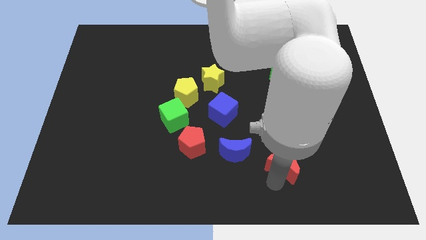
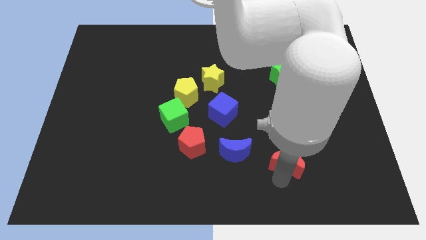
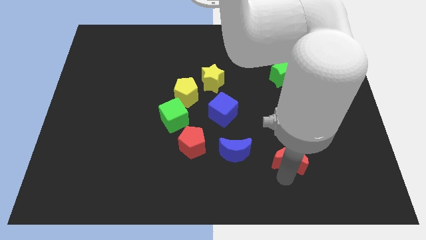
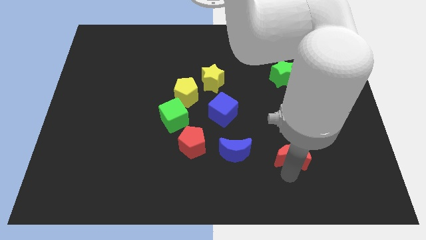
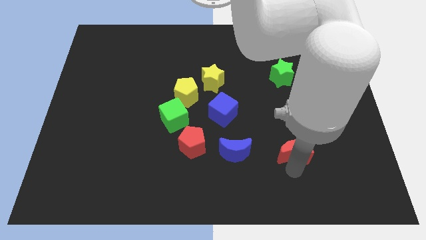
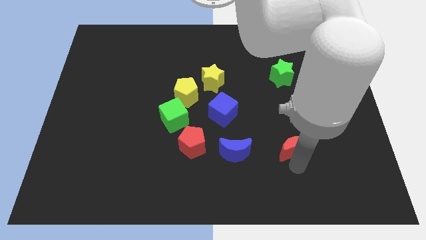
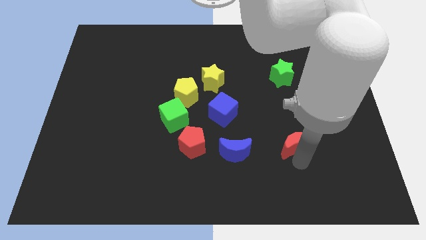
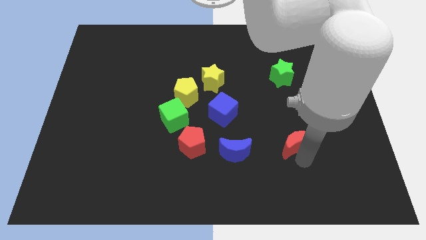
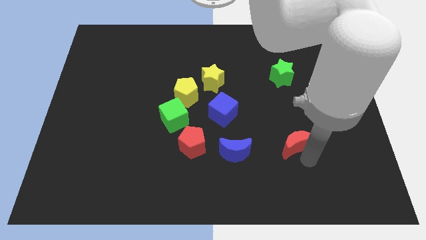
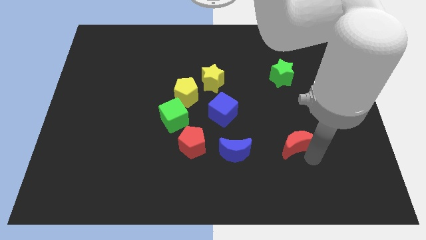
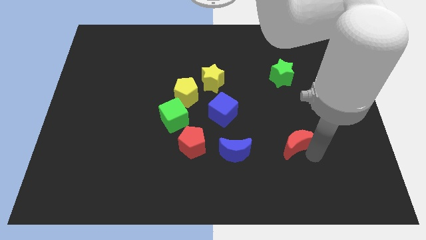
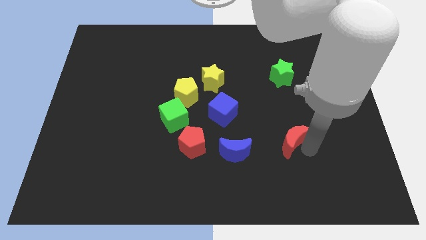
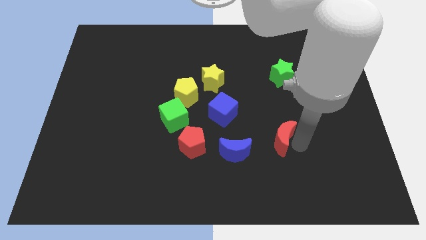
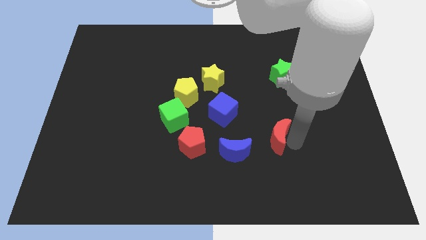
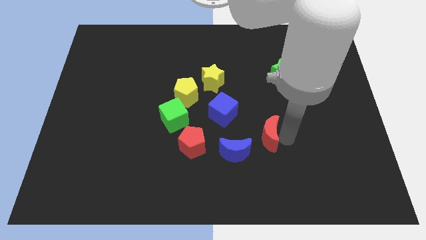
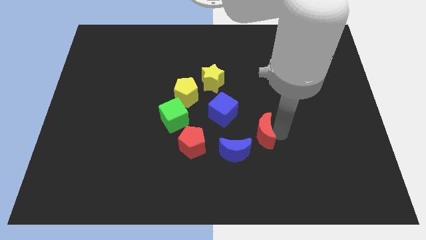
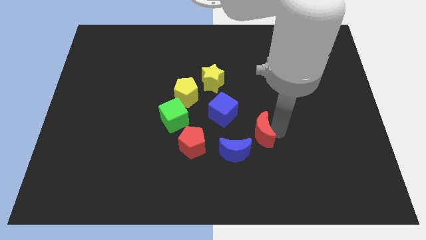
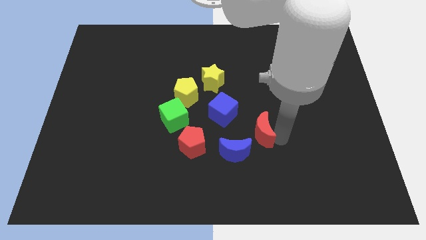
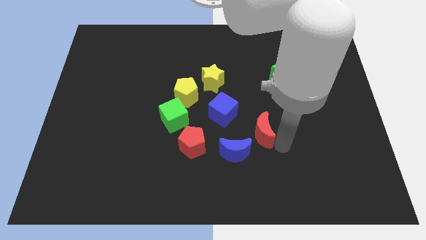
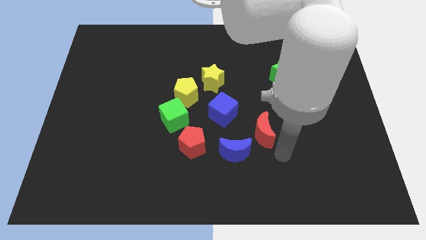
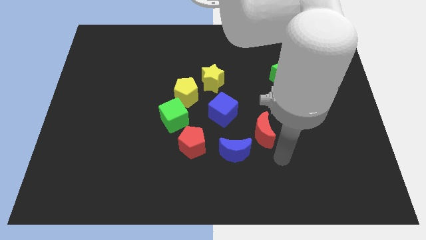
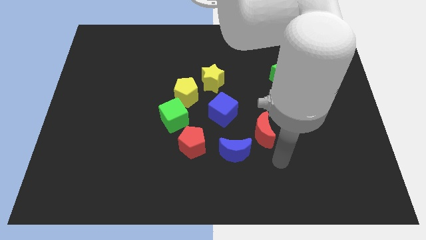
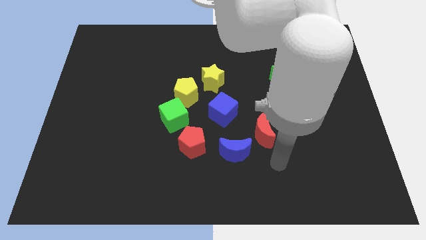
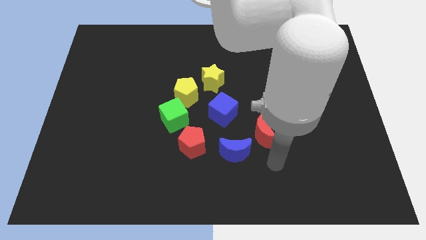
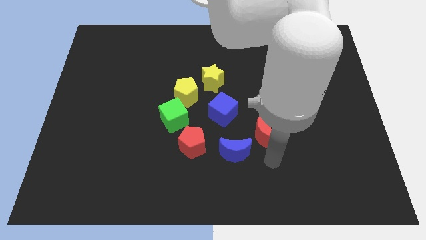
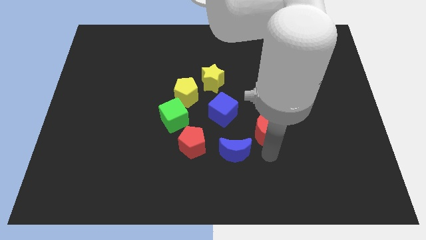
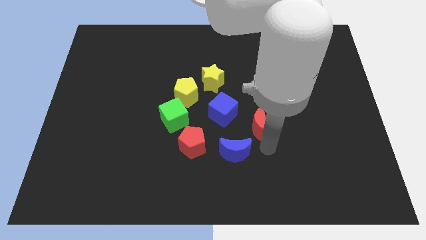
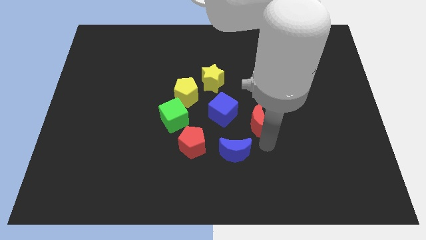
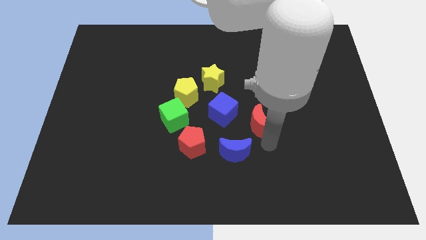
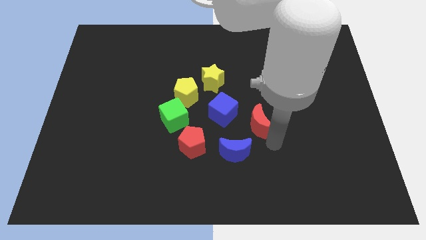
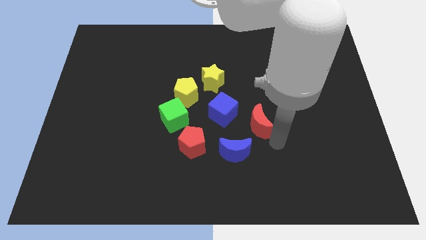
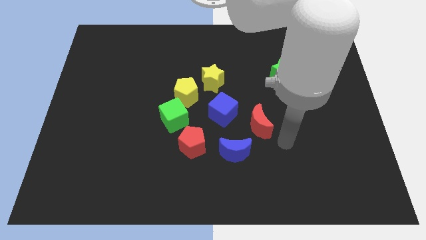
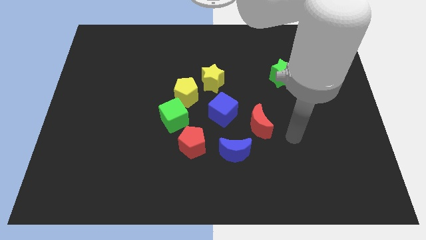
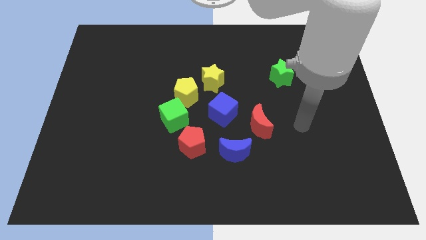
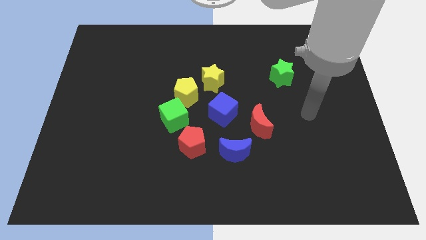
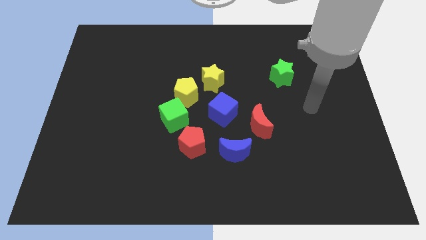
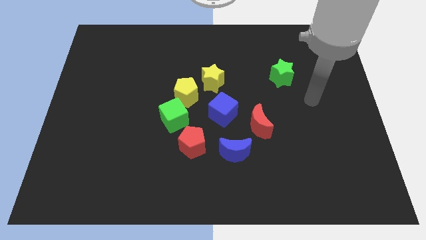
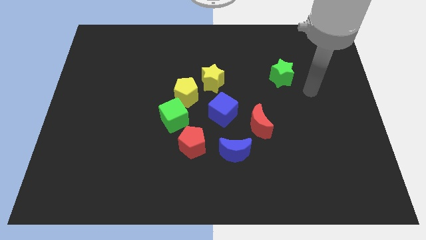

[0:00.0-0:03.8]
move the red crescent to the right side of the blue cube

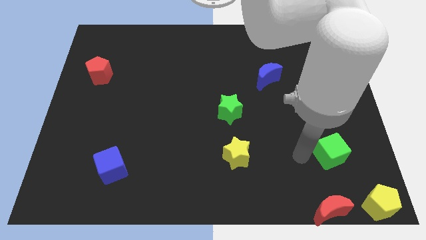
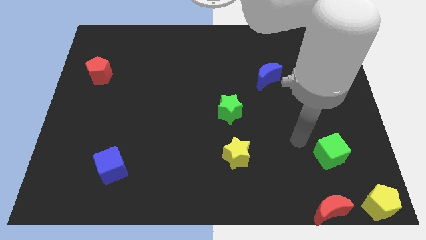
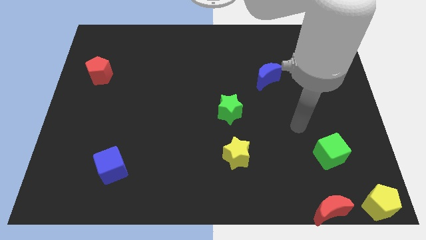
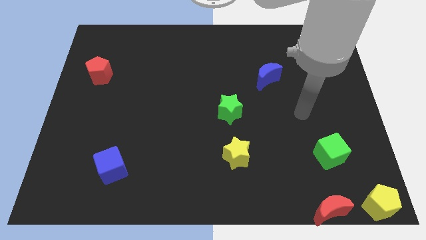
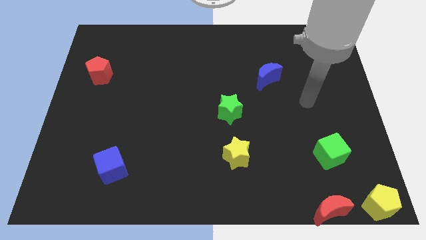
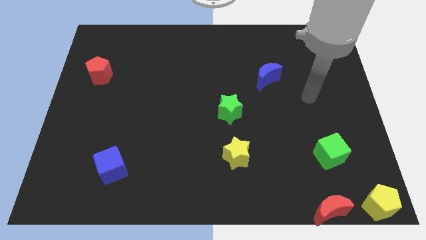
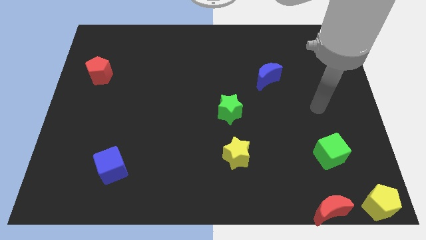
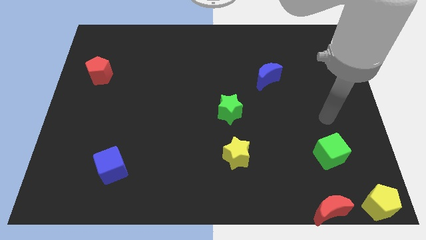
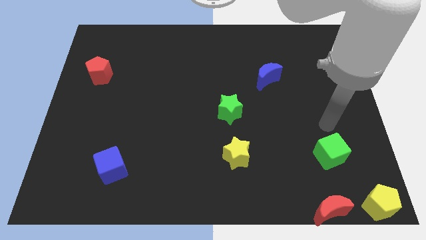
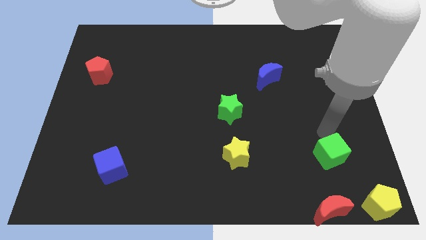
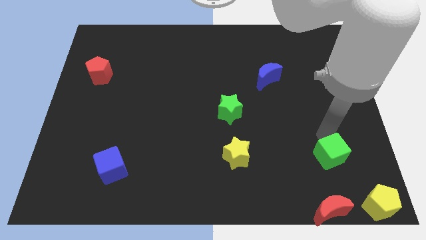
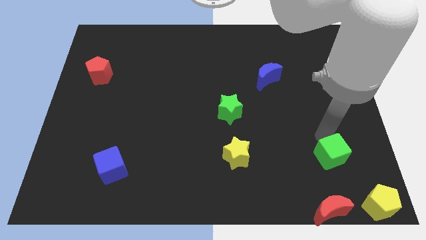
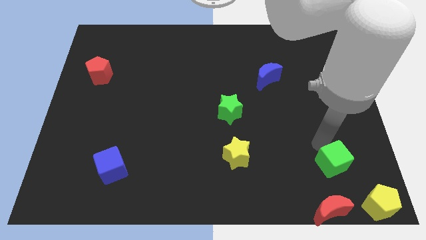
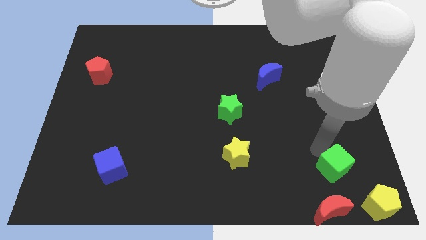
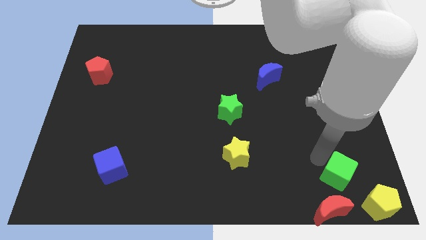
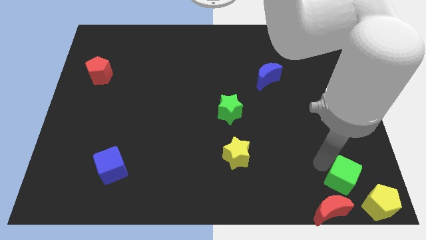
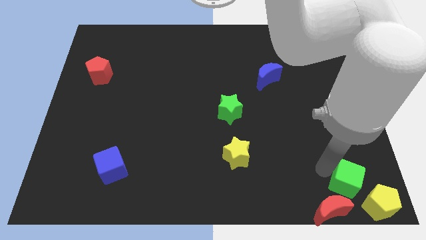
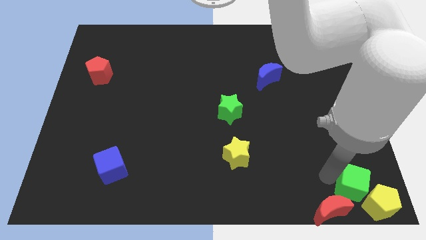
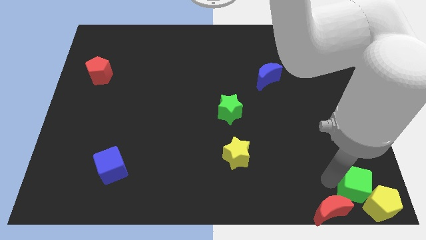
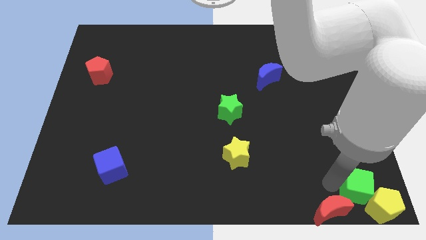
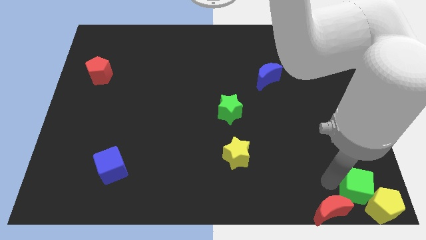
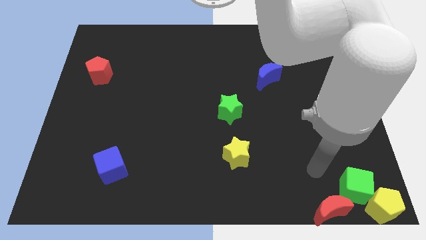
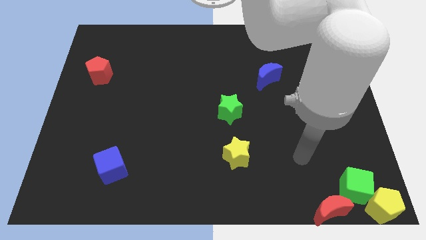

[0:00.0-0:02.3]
put the green cube into the yellow pentagon

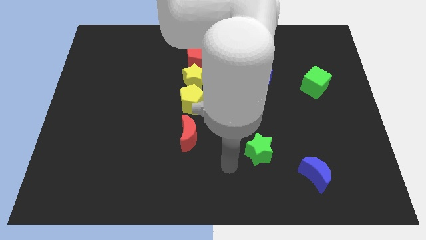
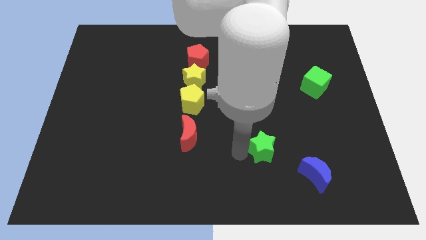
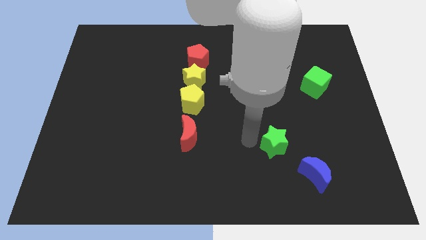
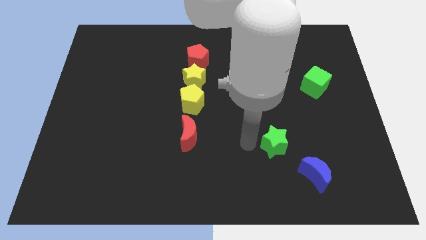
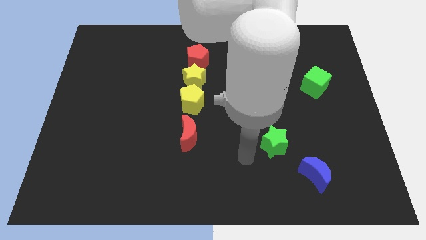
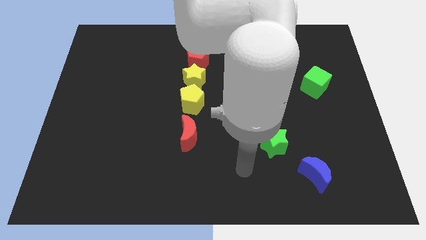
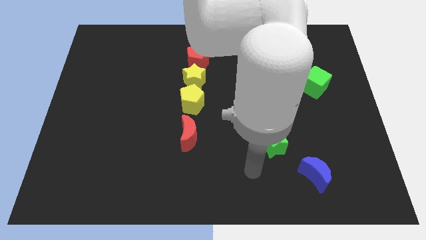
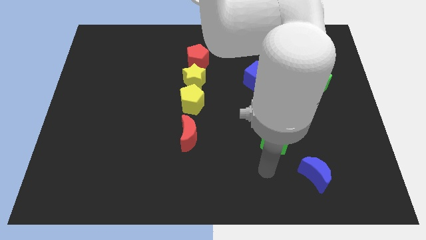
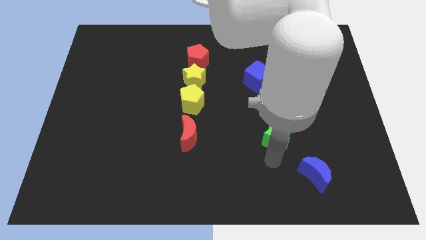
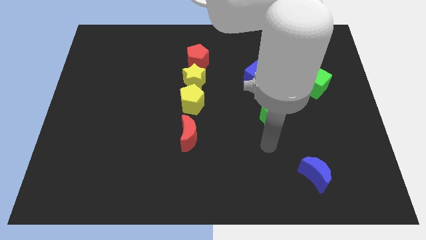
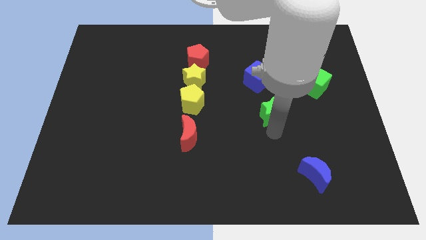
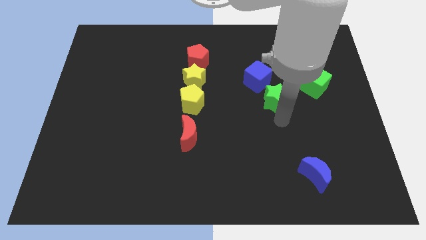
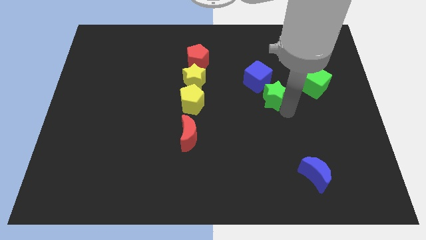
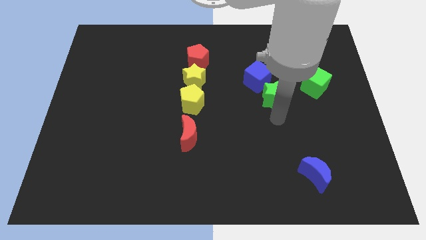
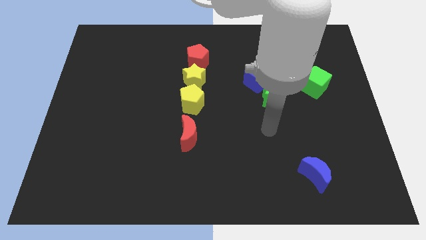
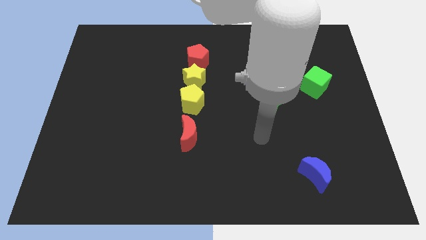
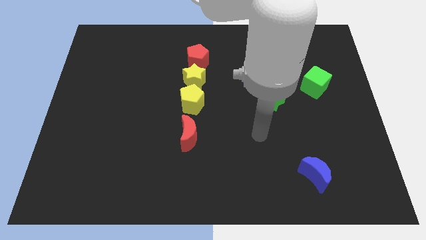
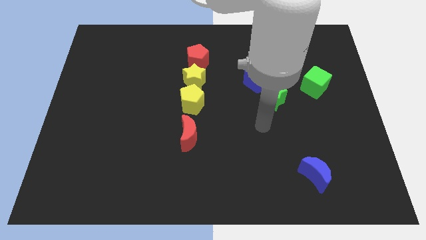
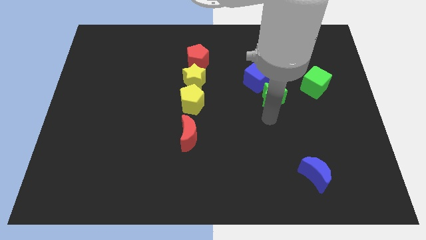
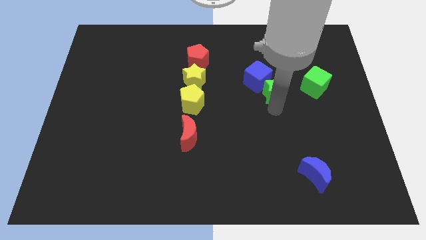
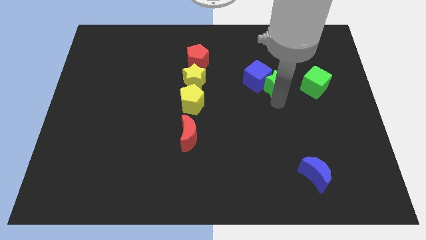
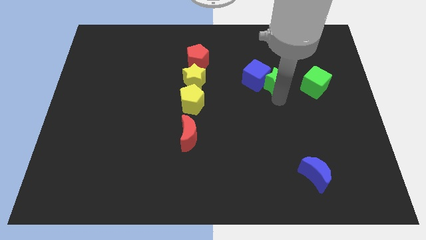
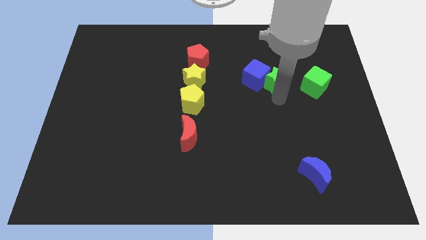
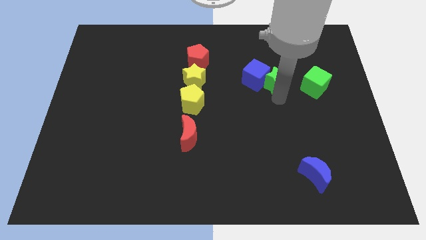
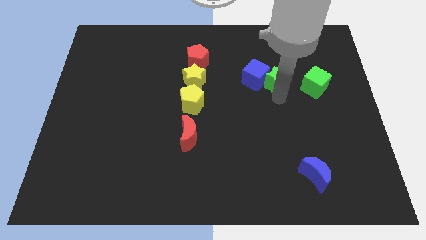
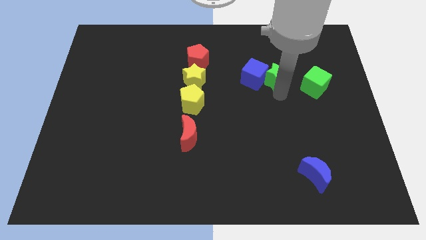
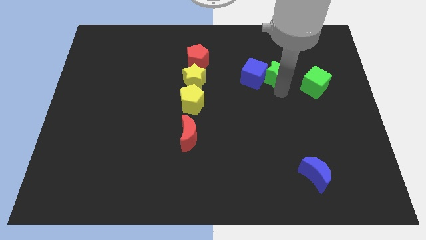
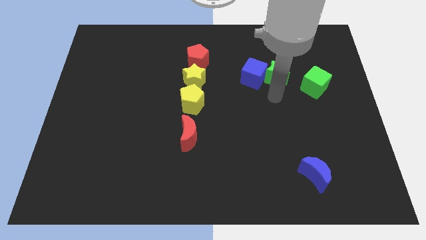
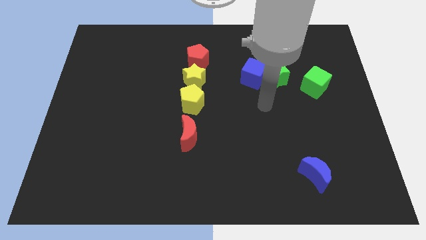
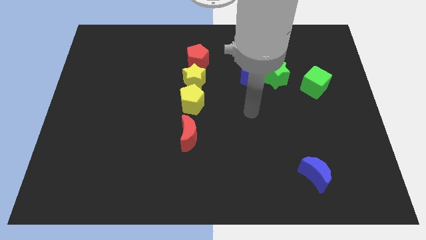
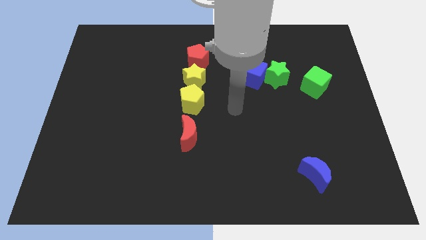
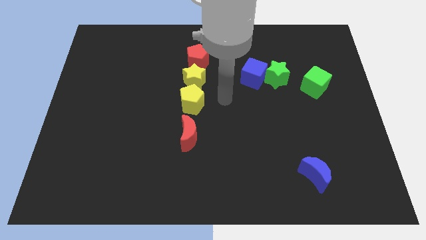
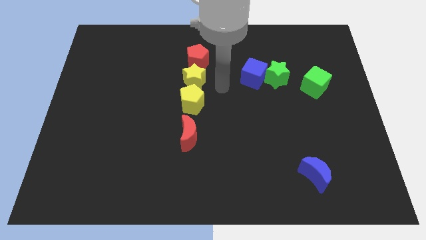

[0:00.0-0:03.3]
place the green star in between blue cube and green cube
